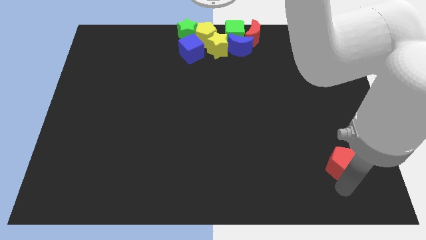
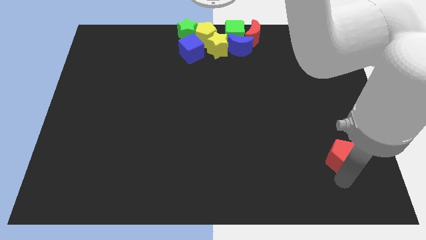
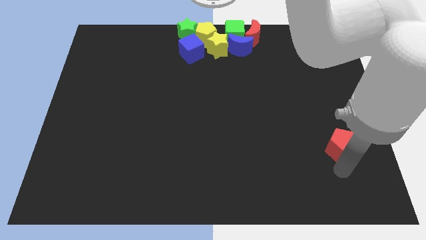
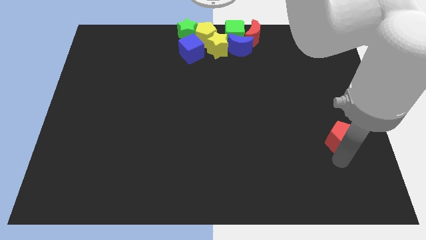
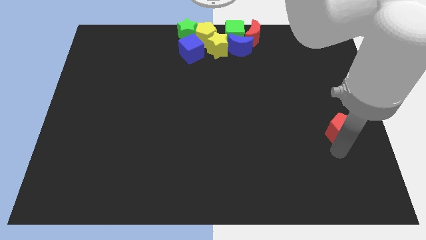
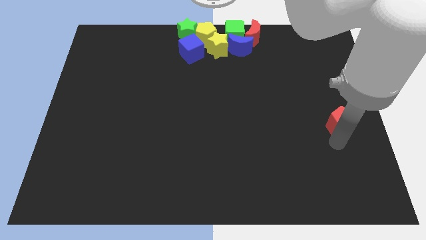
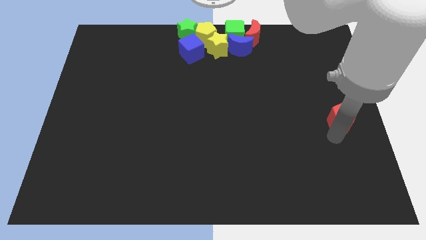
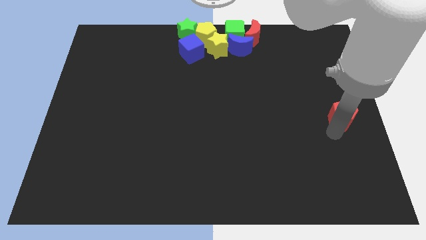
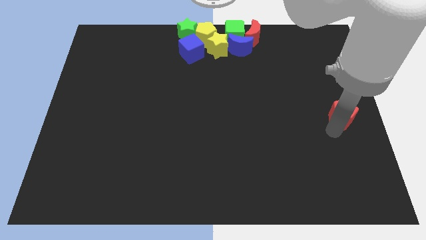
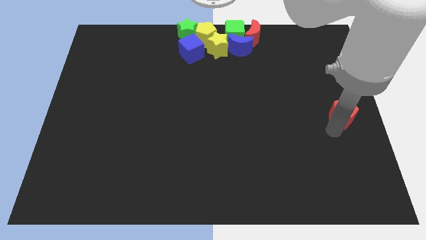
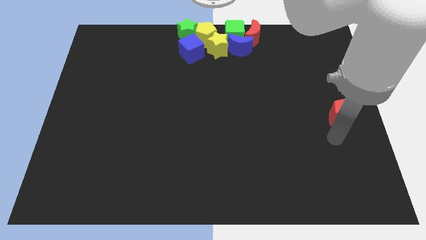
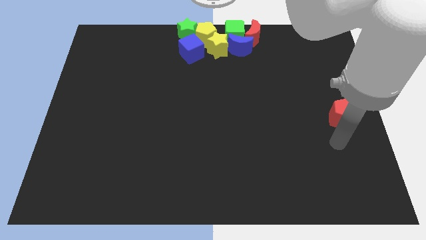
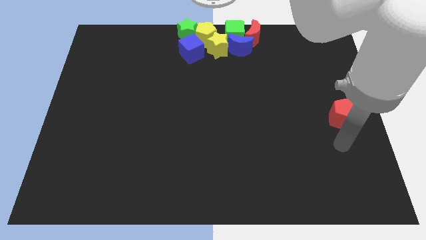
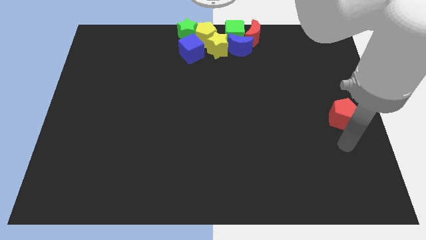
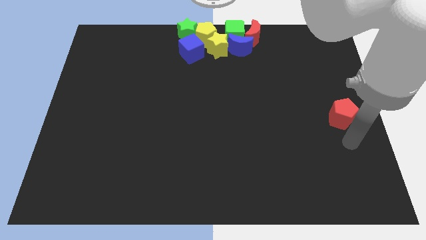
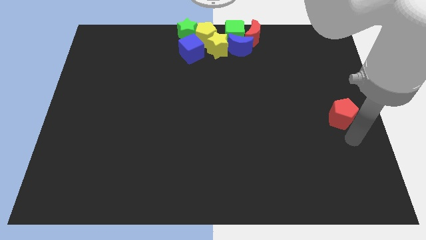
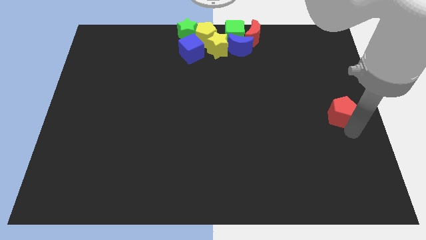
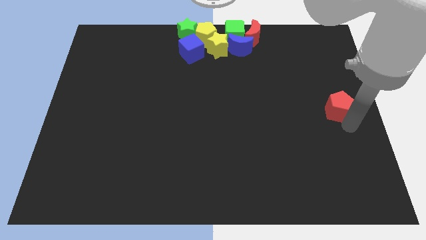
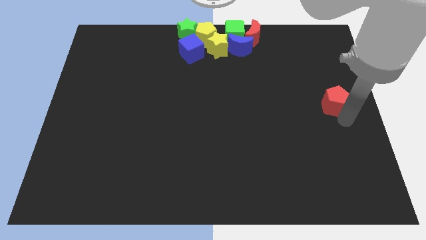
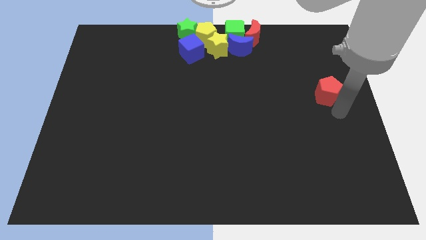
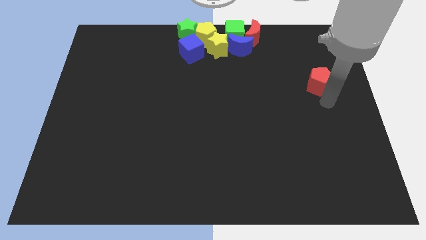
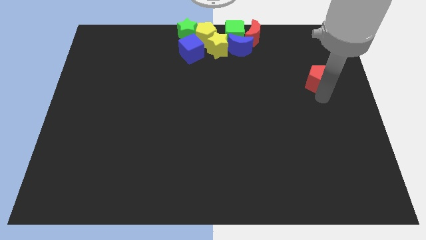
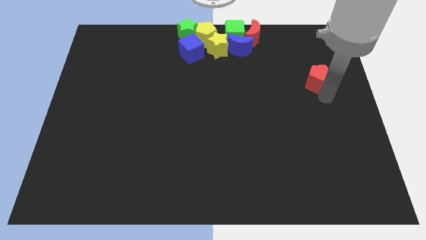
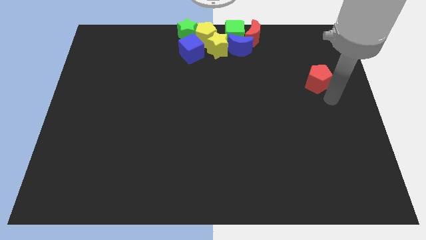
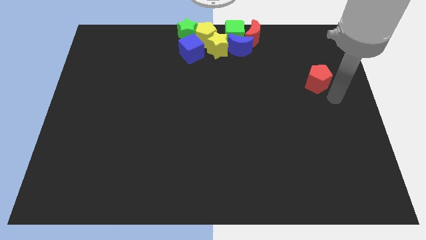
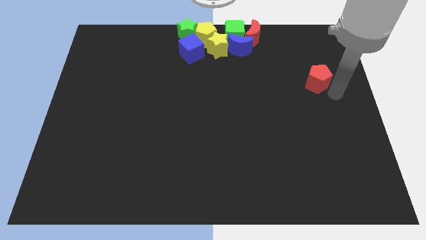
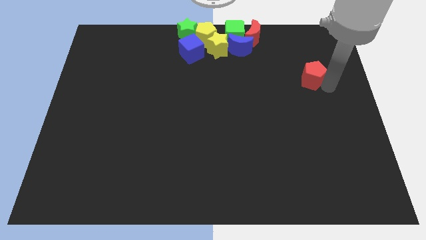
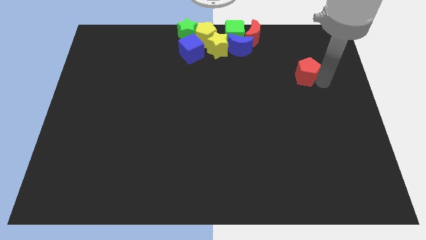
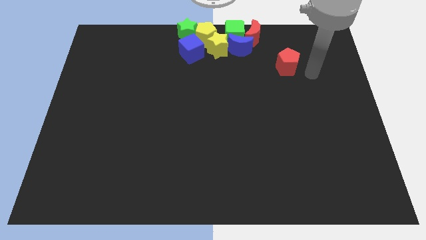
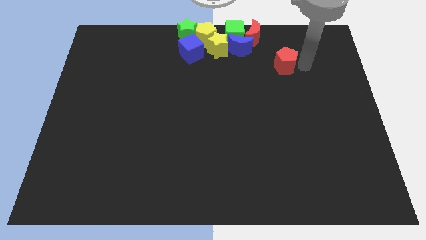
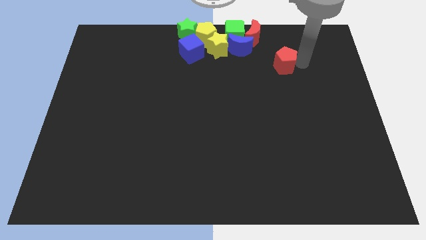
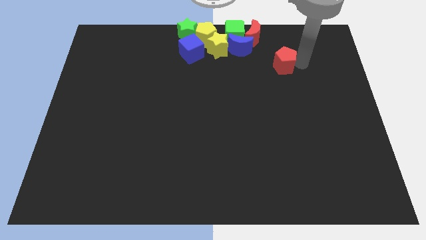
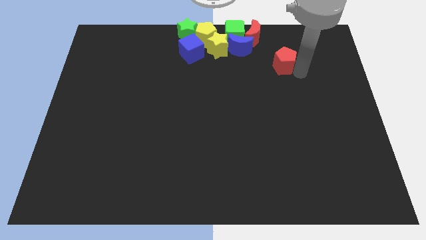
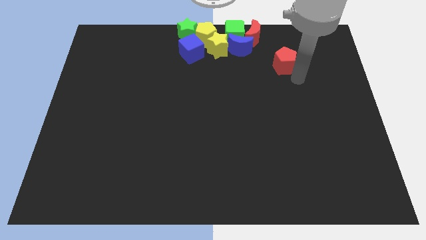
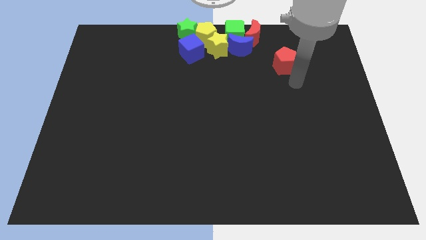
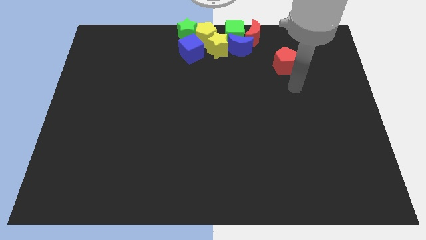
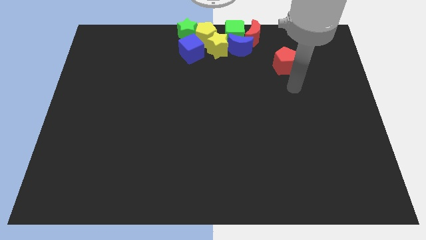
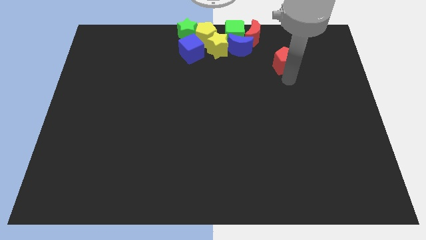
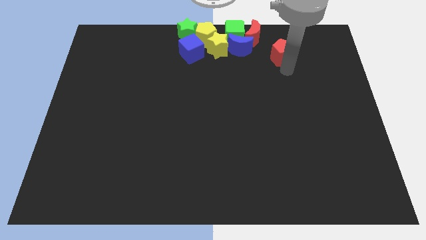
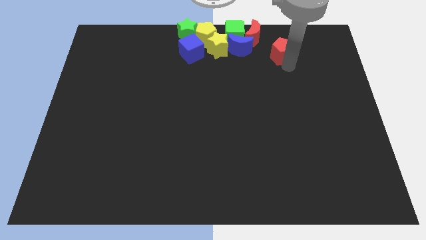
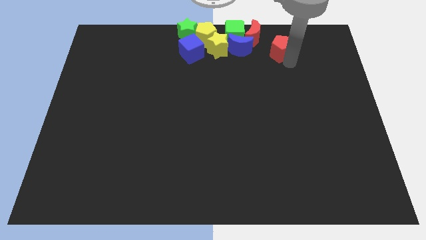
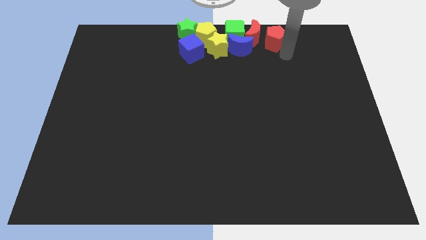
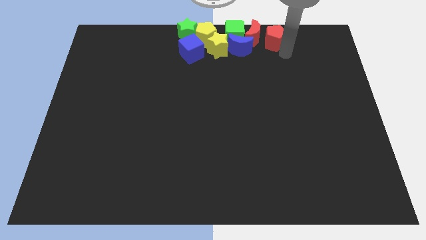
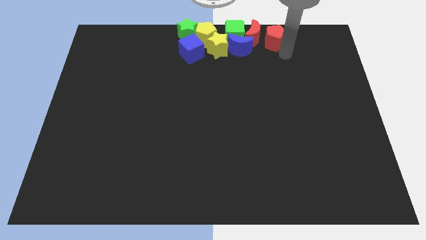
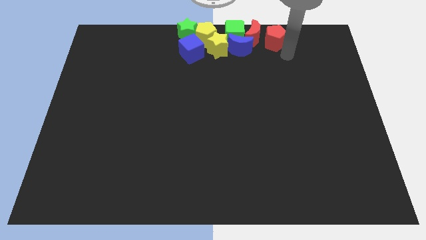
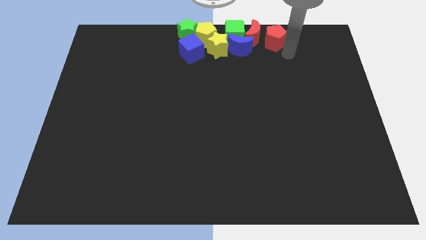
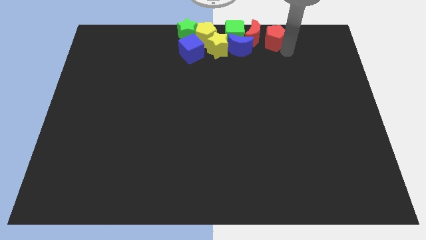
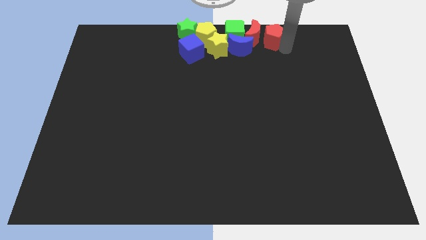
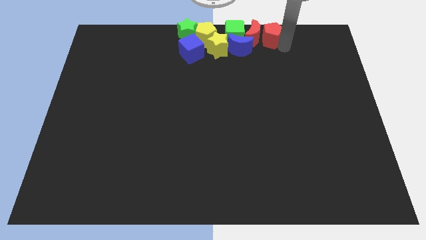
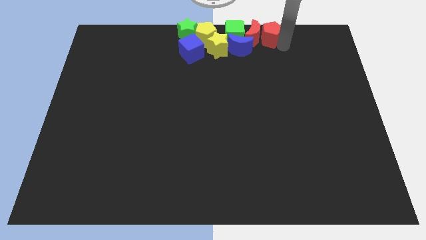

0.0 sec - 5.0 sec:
move the red pentagon to the top center of the board

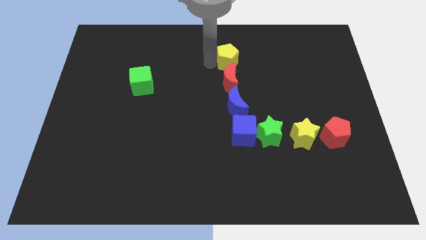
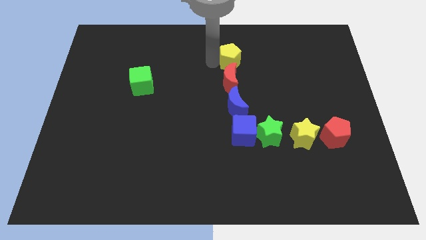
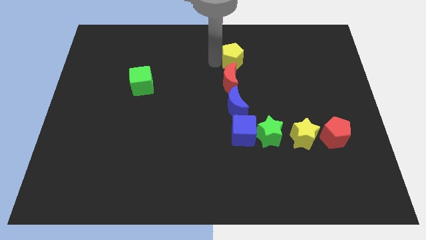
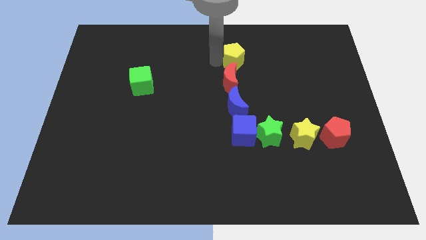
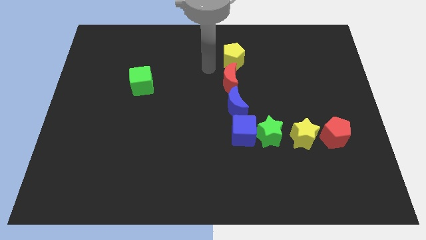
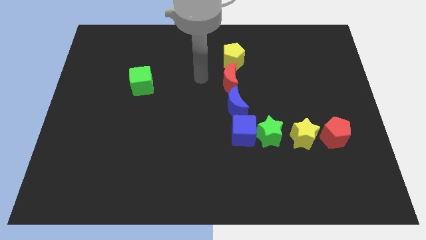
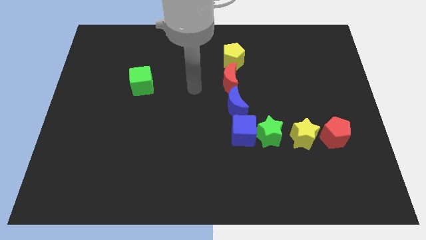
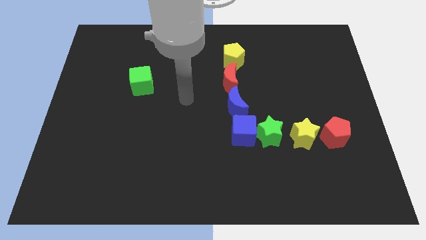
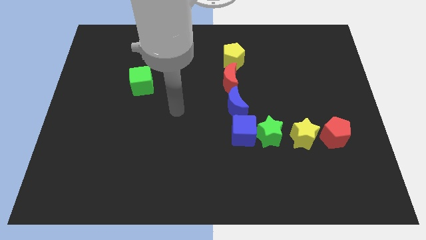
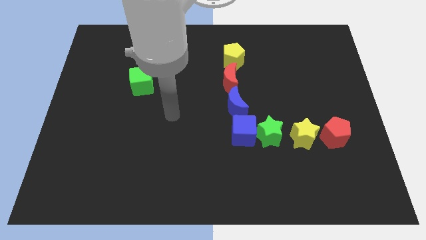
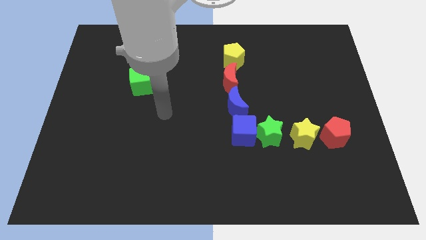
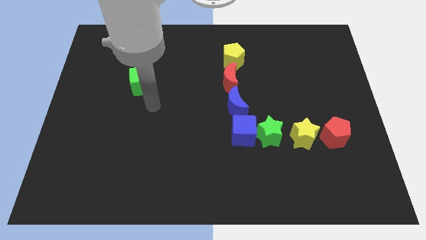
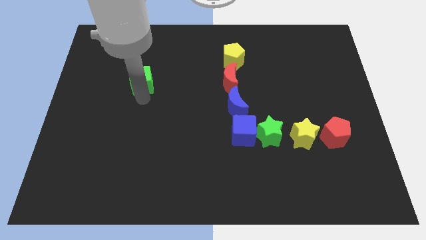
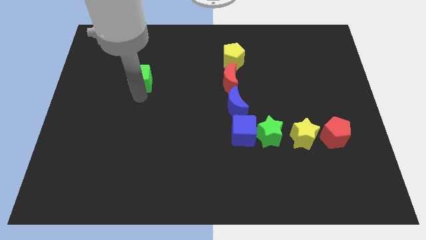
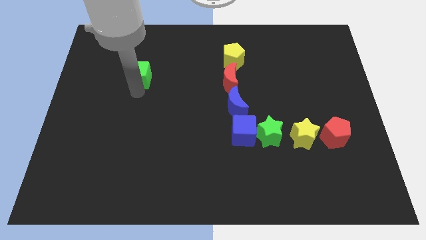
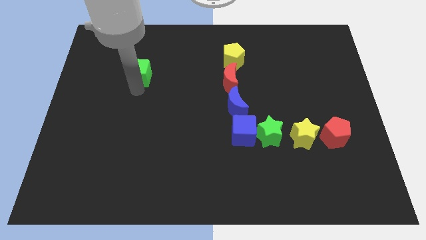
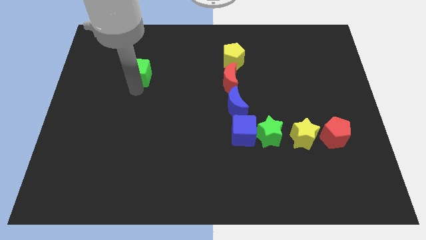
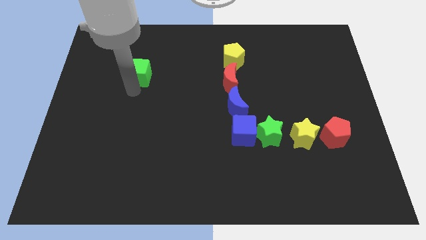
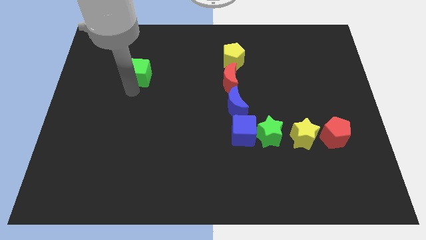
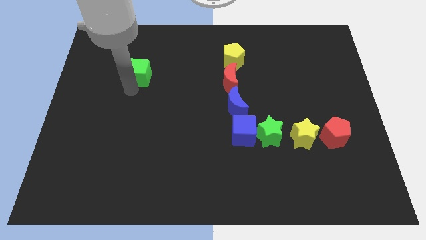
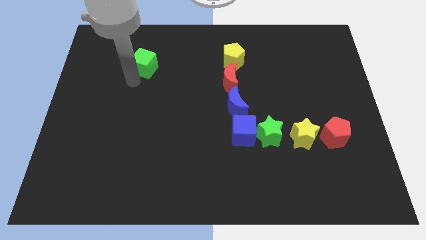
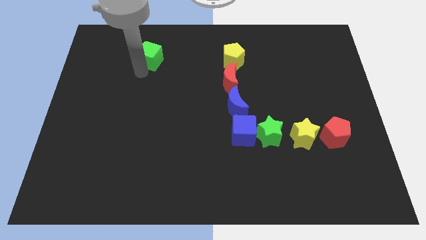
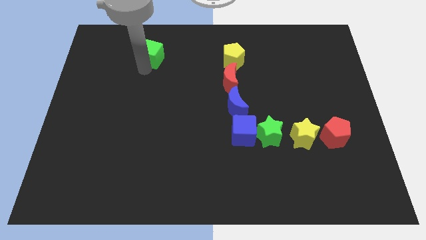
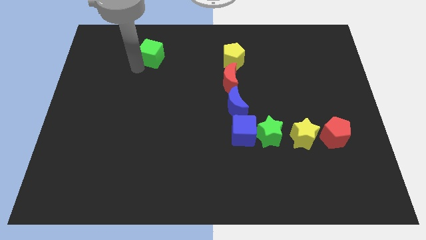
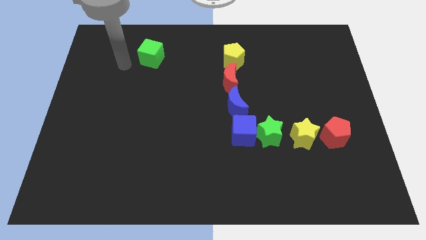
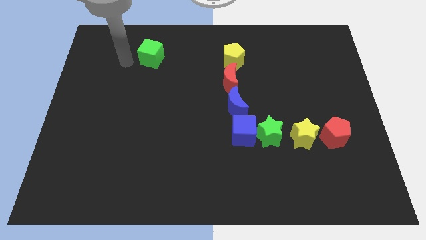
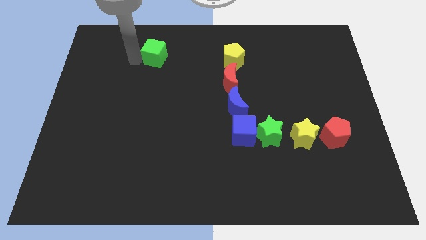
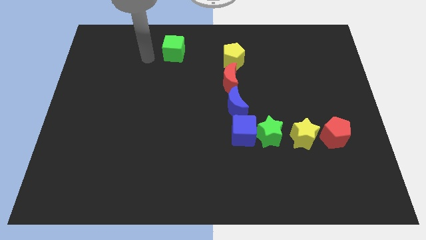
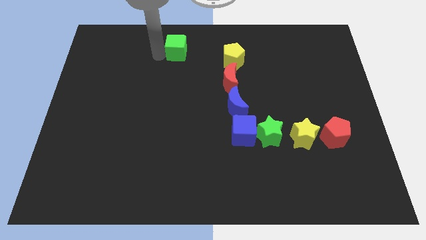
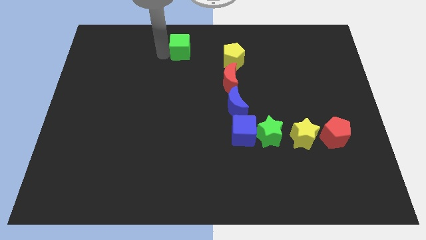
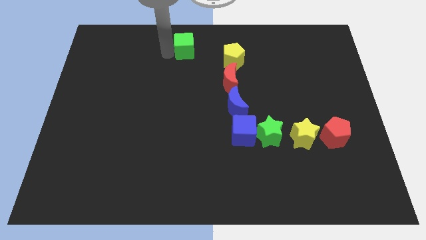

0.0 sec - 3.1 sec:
move the green cube towards to the top side of the board

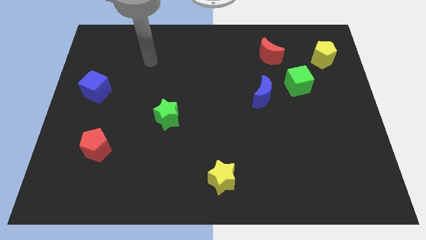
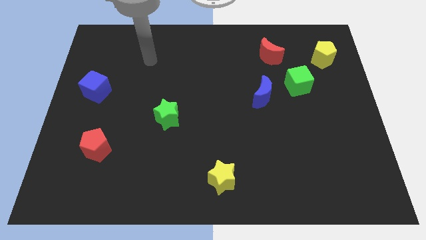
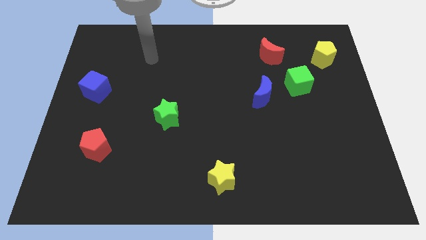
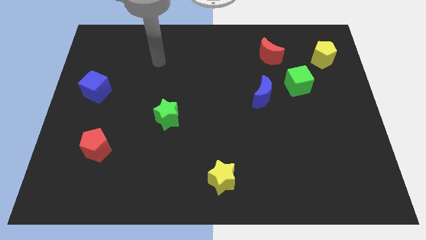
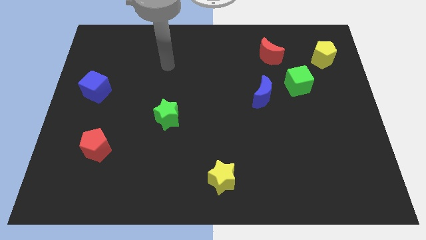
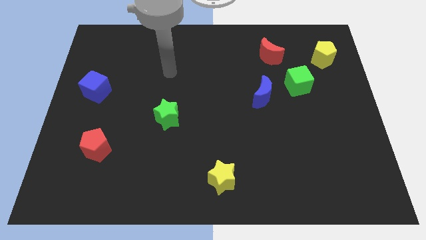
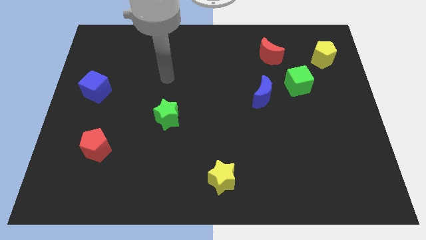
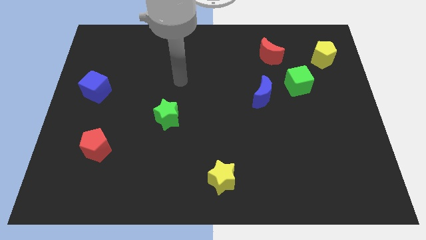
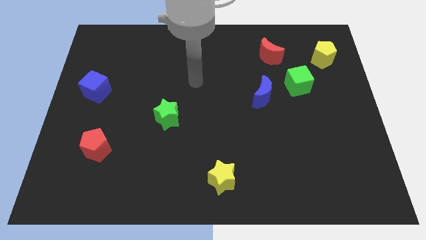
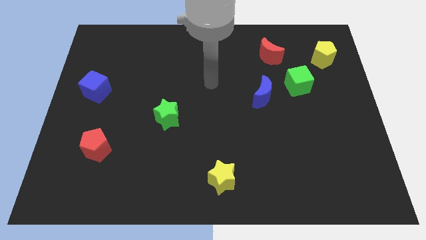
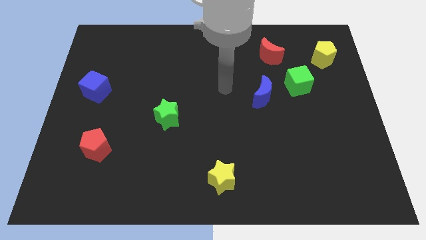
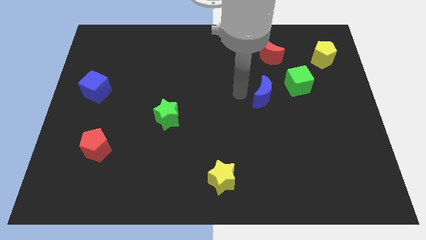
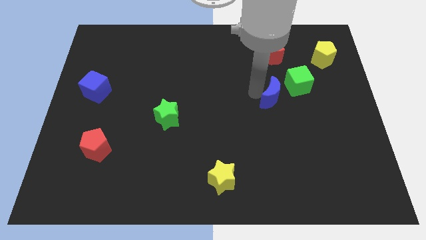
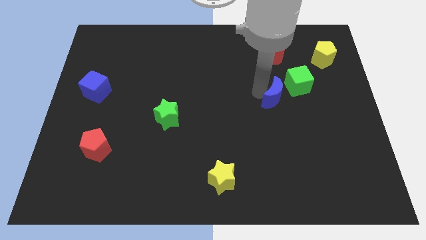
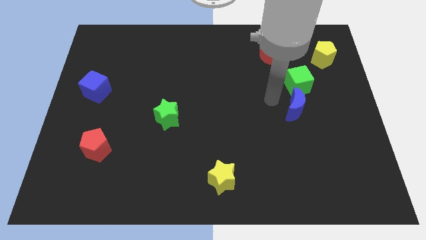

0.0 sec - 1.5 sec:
place the blue crescent below the green cube
